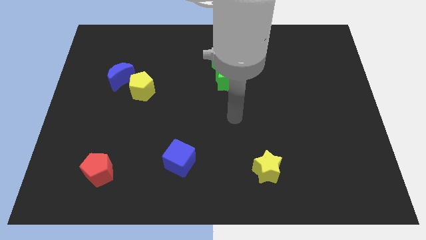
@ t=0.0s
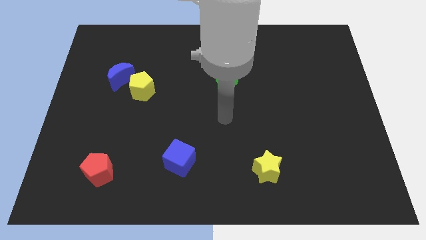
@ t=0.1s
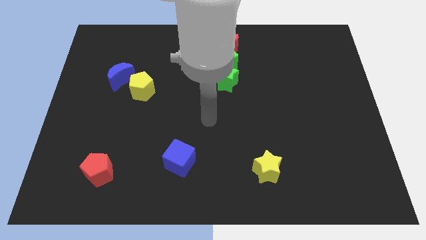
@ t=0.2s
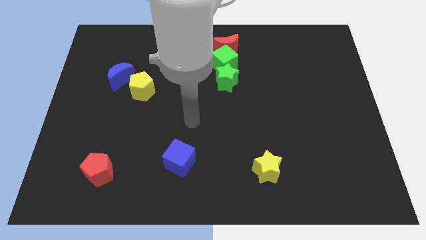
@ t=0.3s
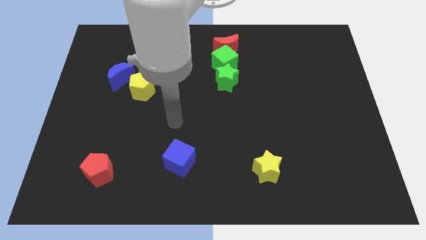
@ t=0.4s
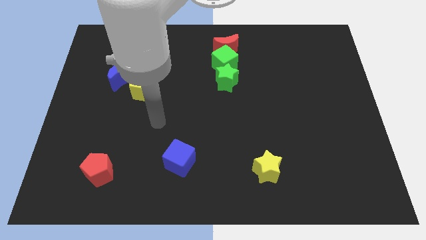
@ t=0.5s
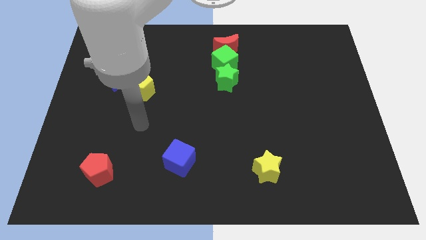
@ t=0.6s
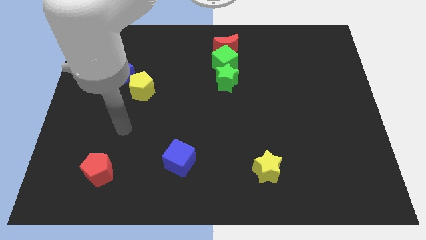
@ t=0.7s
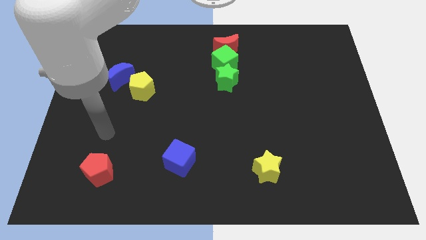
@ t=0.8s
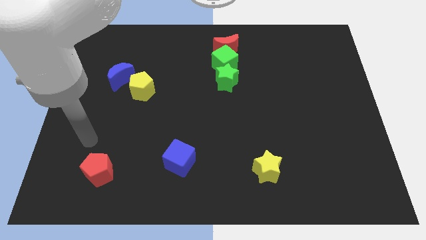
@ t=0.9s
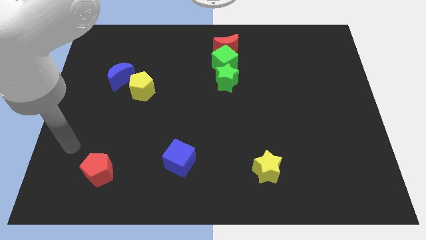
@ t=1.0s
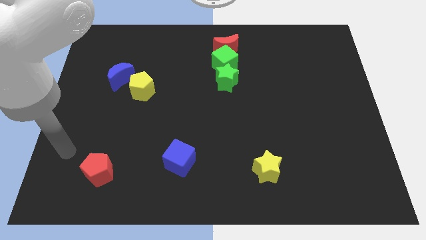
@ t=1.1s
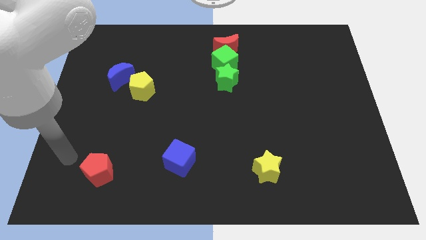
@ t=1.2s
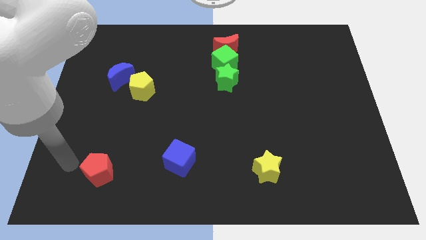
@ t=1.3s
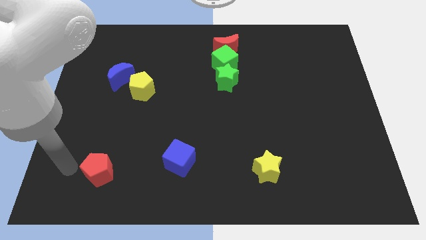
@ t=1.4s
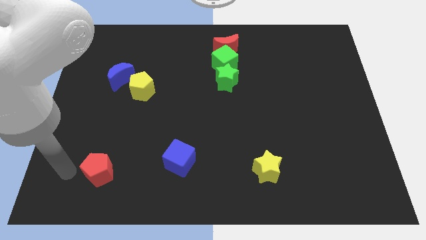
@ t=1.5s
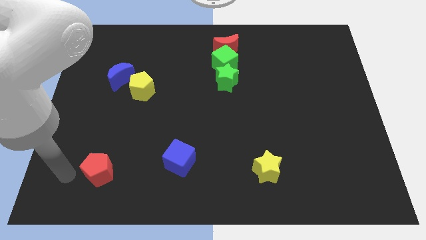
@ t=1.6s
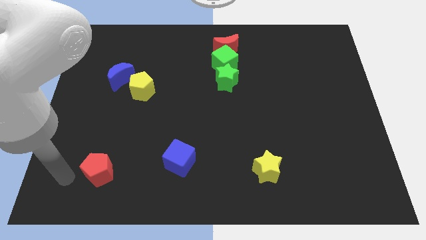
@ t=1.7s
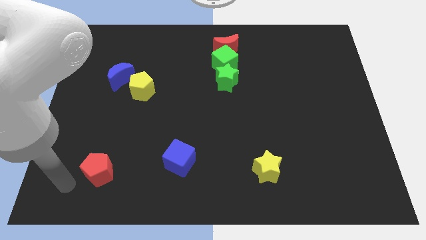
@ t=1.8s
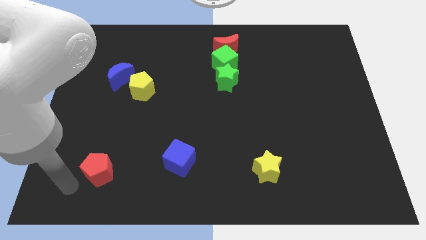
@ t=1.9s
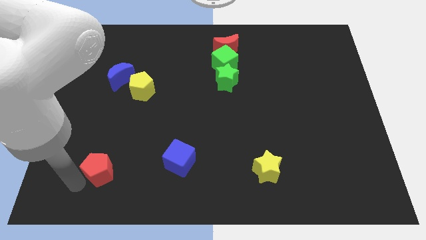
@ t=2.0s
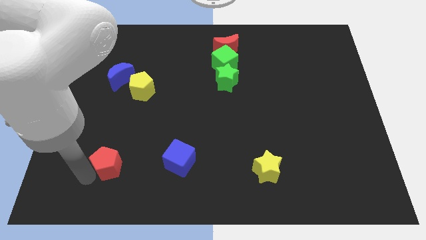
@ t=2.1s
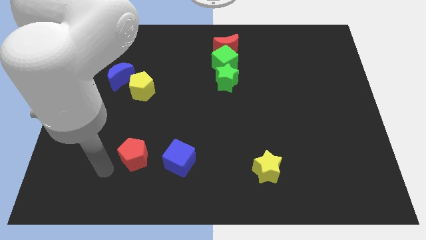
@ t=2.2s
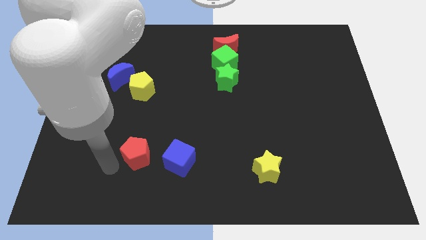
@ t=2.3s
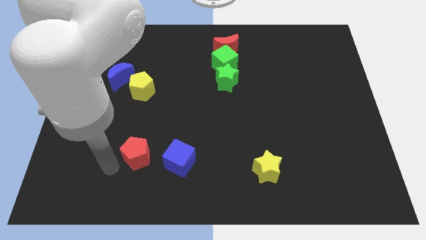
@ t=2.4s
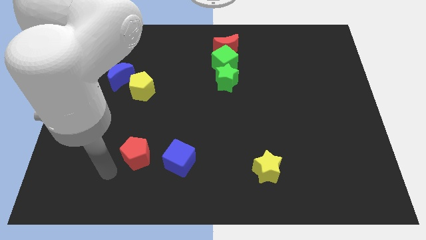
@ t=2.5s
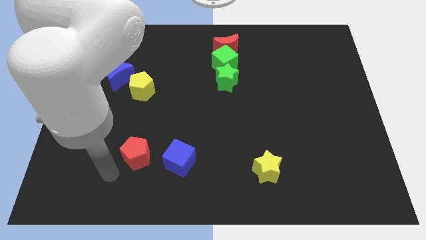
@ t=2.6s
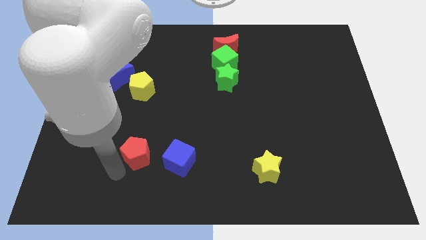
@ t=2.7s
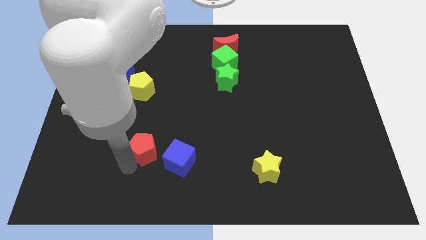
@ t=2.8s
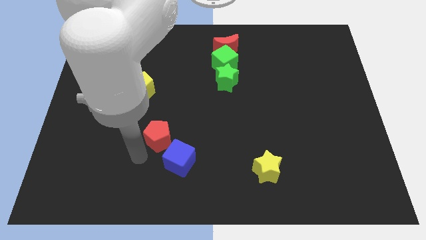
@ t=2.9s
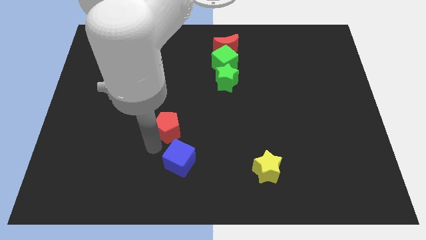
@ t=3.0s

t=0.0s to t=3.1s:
move the red pentagon to the left of blue cube

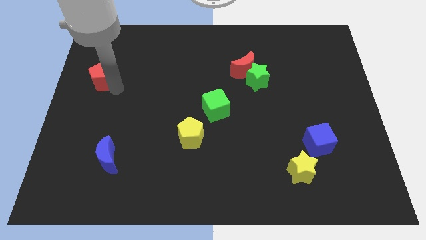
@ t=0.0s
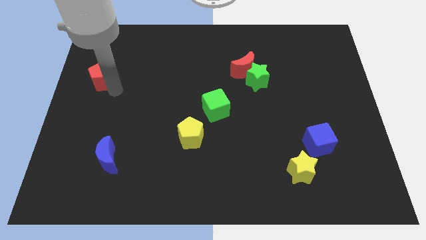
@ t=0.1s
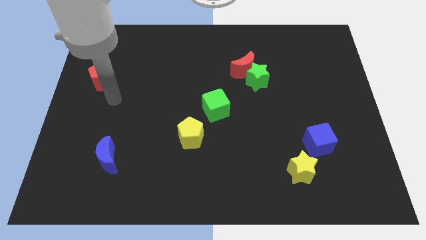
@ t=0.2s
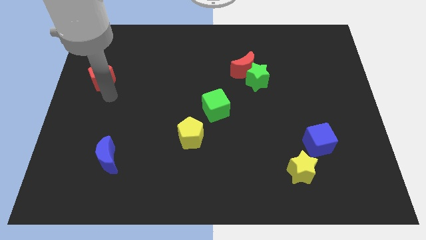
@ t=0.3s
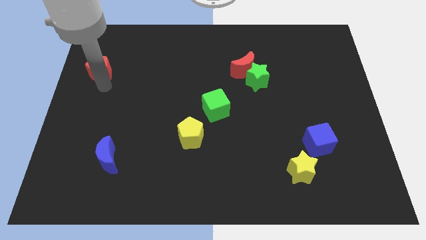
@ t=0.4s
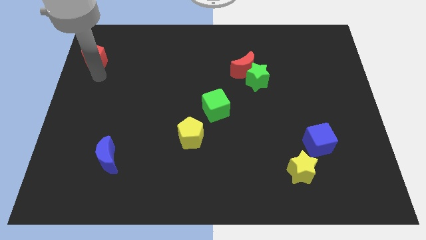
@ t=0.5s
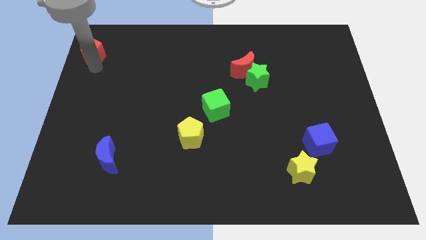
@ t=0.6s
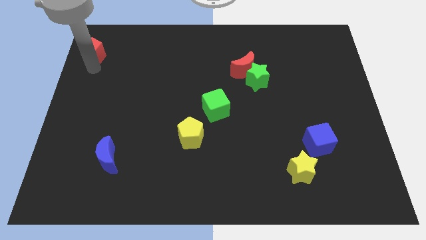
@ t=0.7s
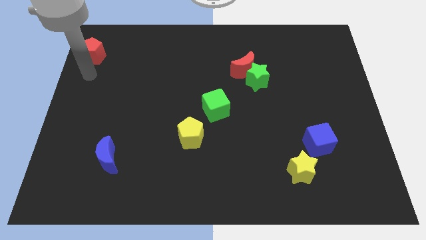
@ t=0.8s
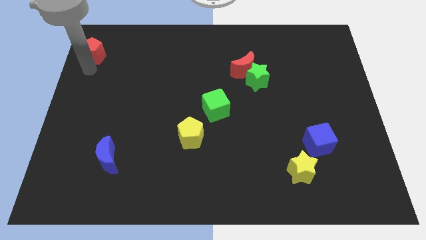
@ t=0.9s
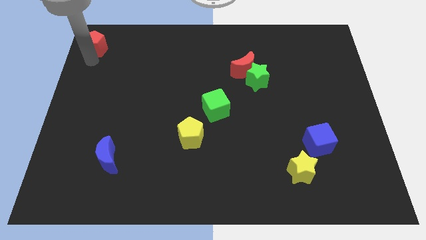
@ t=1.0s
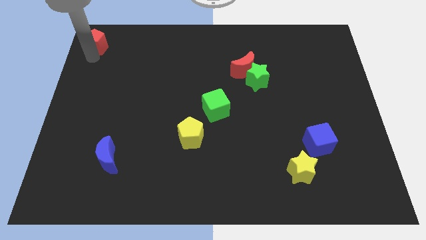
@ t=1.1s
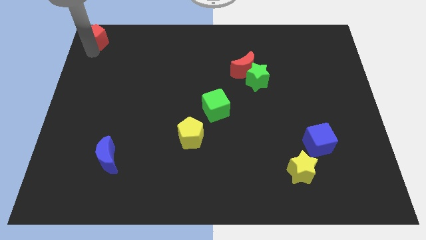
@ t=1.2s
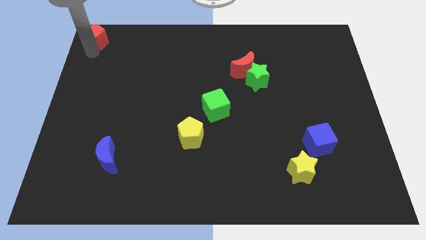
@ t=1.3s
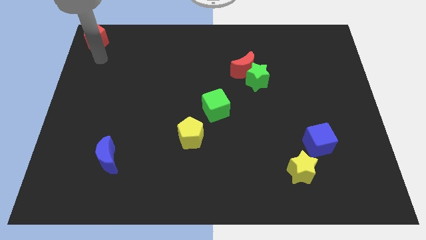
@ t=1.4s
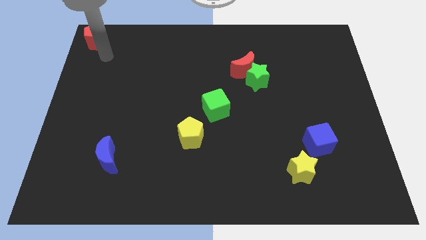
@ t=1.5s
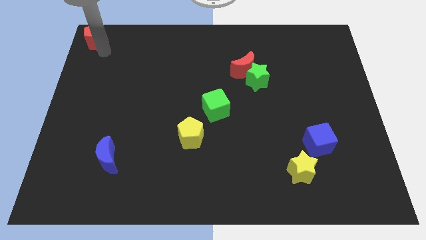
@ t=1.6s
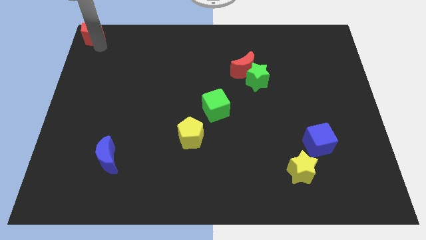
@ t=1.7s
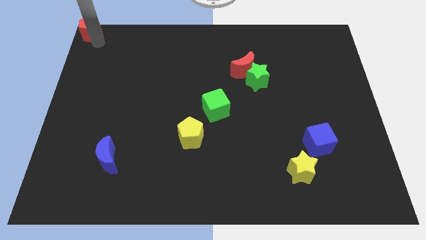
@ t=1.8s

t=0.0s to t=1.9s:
move the red pentagon towards the top left corner

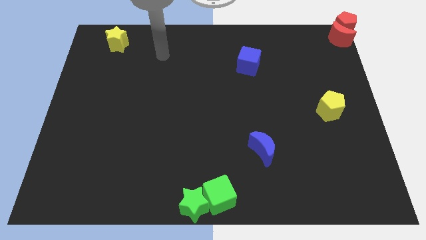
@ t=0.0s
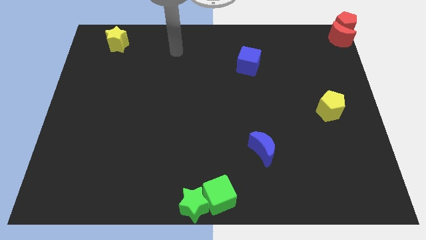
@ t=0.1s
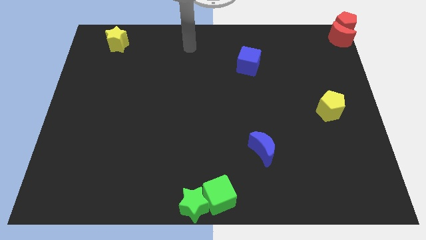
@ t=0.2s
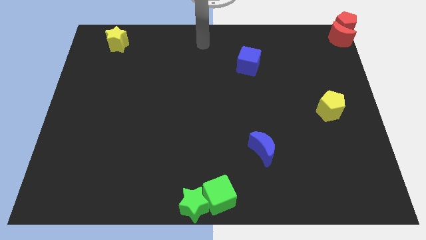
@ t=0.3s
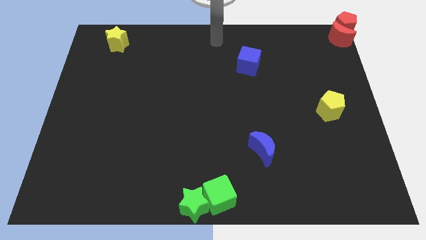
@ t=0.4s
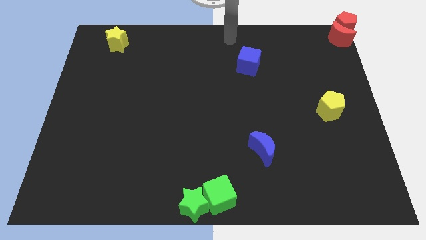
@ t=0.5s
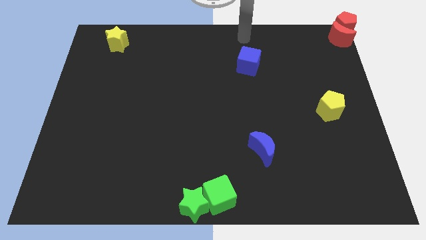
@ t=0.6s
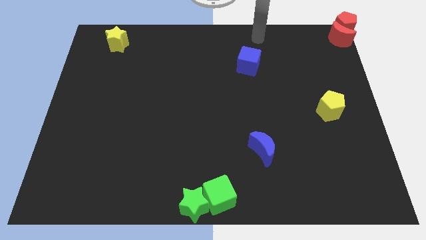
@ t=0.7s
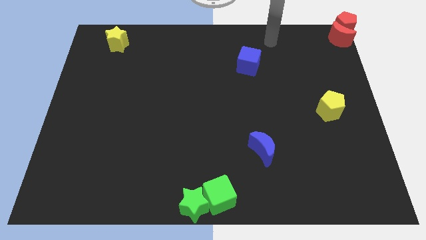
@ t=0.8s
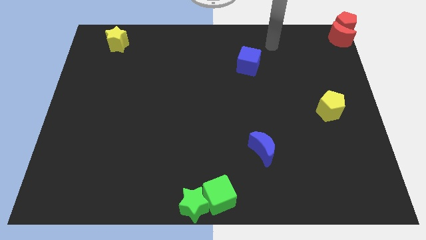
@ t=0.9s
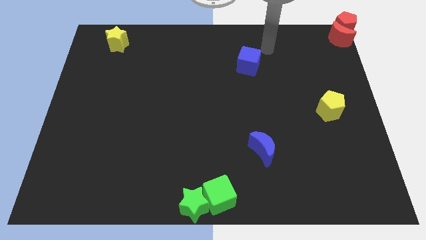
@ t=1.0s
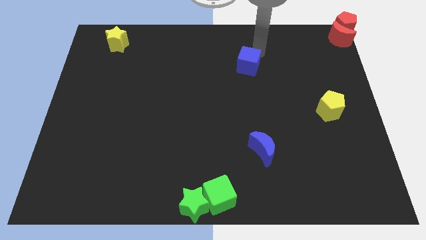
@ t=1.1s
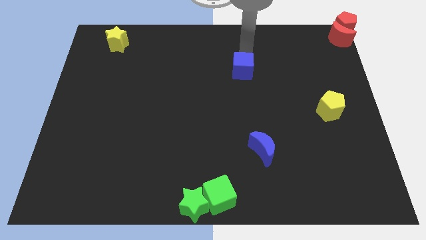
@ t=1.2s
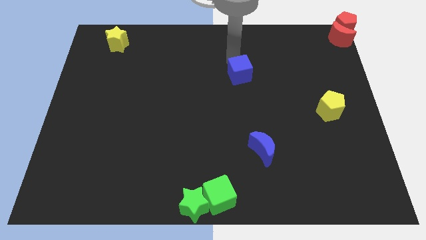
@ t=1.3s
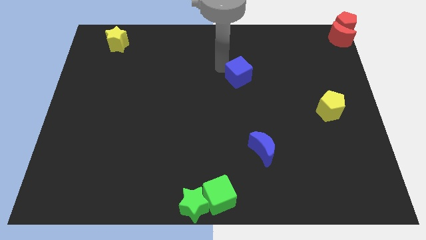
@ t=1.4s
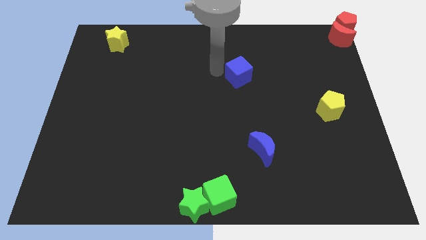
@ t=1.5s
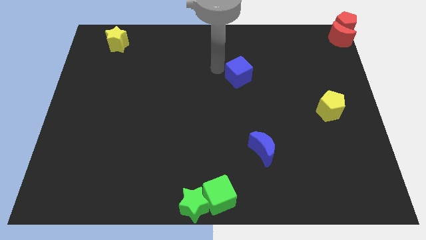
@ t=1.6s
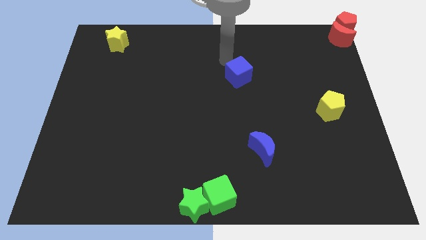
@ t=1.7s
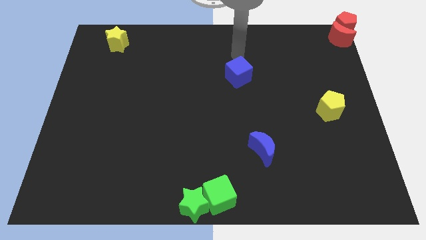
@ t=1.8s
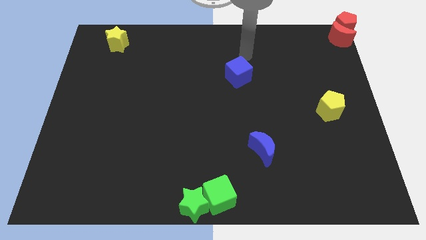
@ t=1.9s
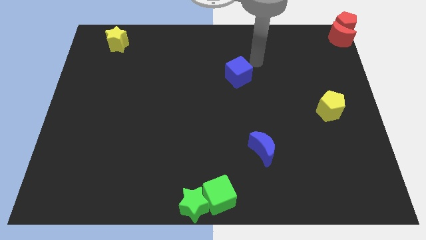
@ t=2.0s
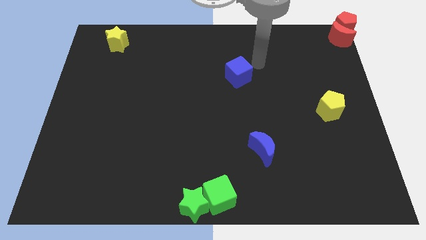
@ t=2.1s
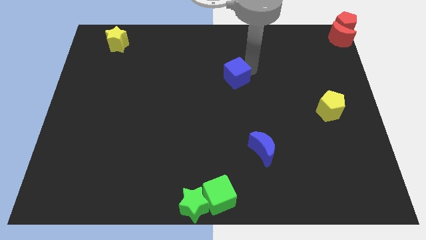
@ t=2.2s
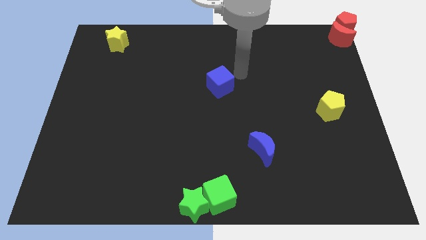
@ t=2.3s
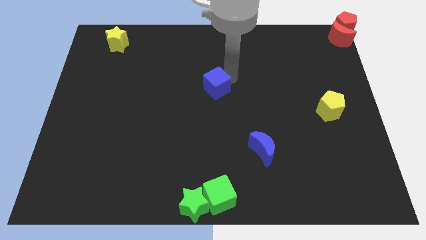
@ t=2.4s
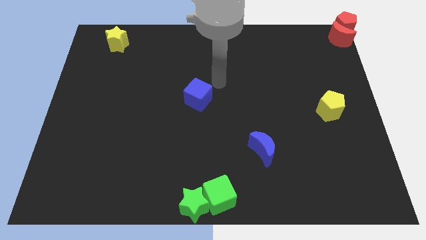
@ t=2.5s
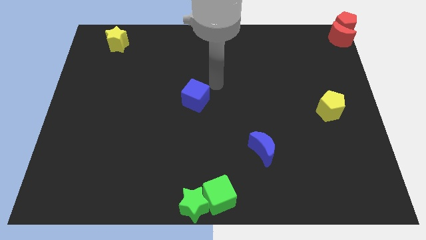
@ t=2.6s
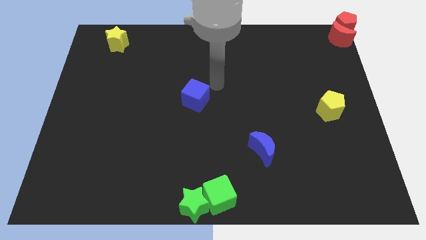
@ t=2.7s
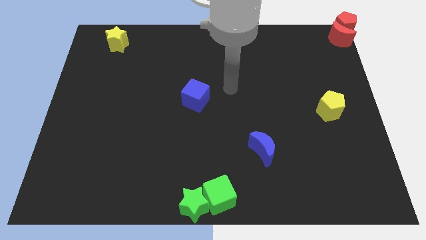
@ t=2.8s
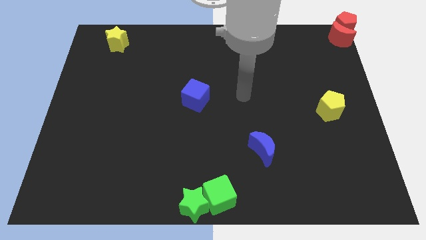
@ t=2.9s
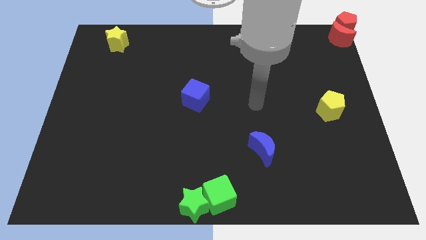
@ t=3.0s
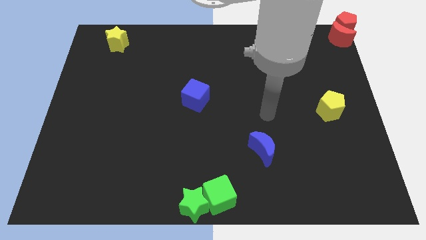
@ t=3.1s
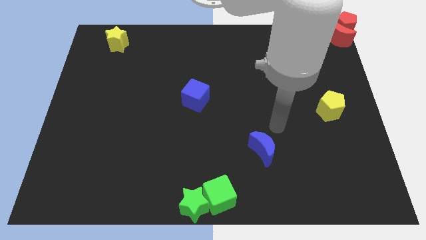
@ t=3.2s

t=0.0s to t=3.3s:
push the blue cube to the center of the board

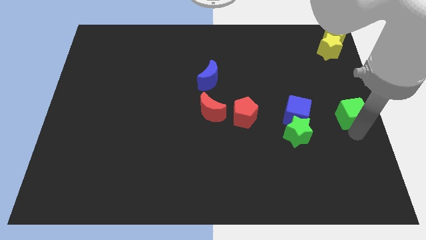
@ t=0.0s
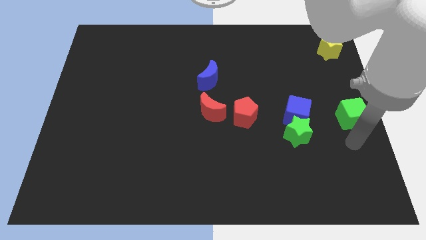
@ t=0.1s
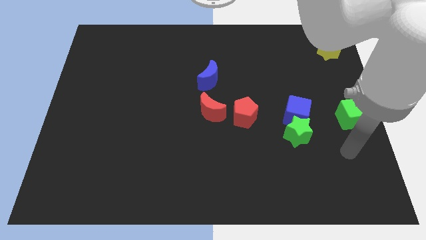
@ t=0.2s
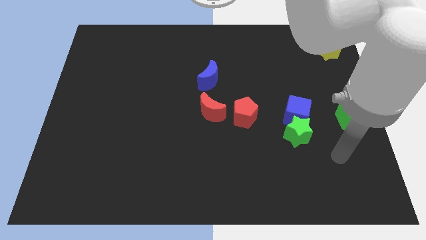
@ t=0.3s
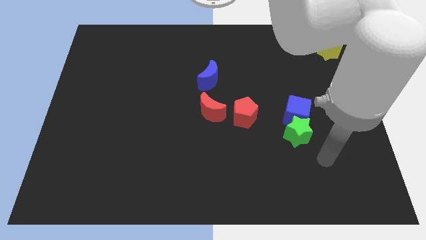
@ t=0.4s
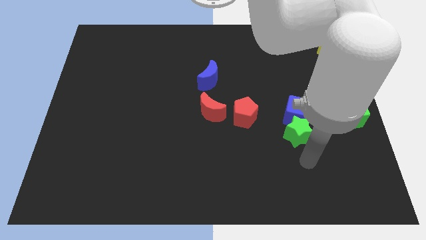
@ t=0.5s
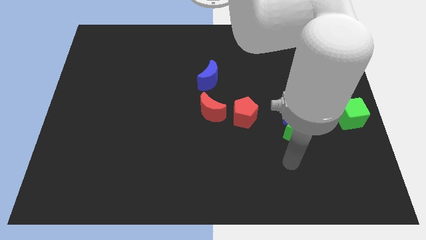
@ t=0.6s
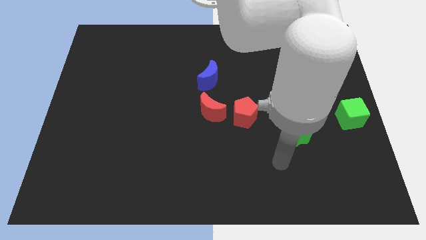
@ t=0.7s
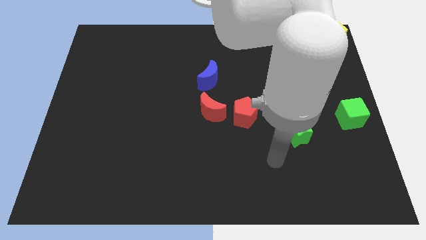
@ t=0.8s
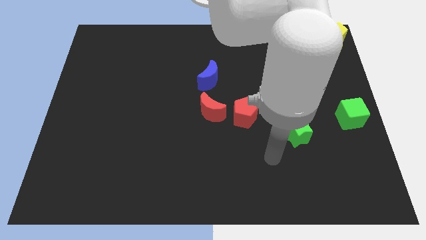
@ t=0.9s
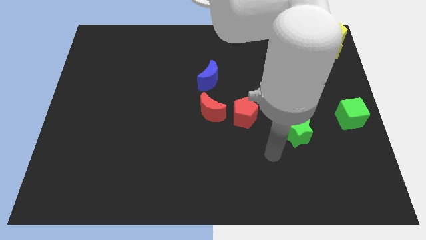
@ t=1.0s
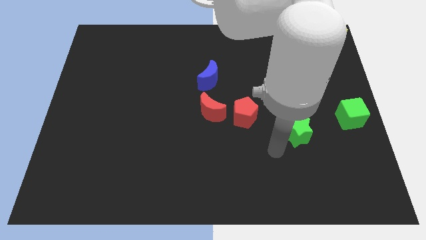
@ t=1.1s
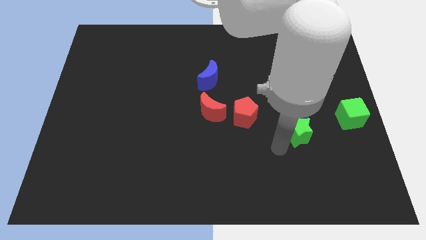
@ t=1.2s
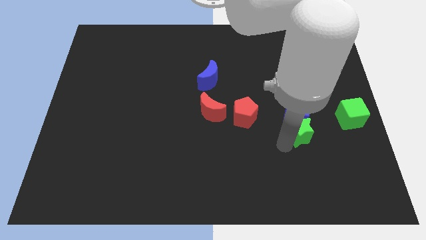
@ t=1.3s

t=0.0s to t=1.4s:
move the arm at the left side of the green star
